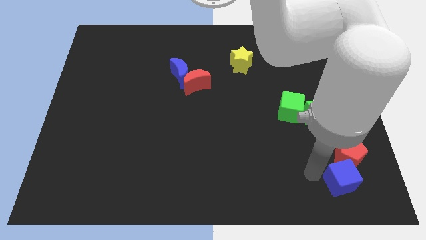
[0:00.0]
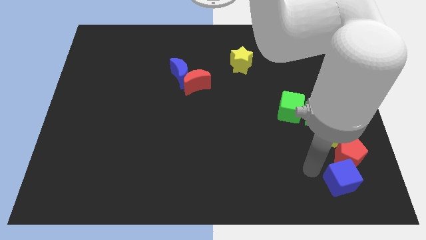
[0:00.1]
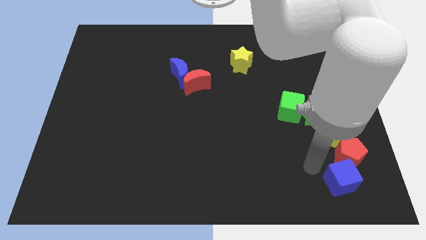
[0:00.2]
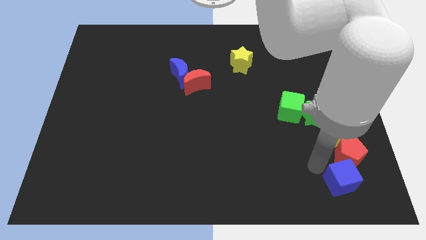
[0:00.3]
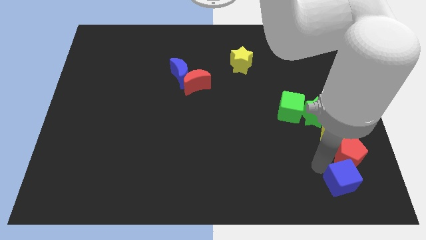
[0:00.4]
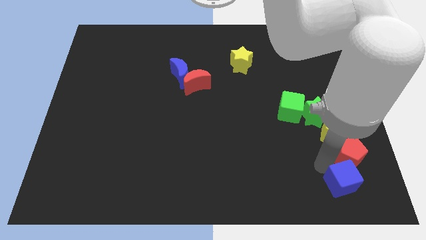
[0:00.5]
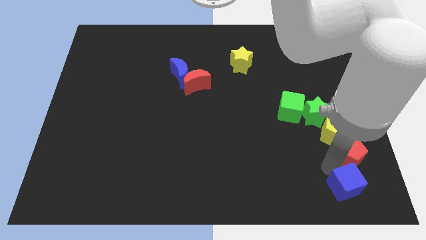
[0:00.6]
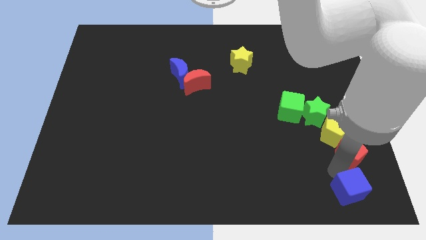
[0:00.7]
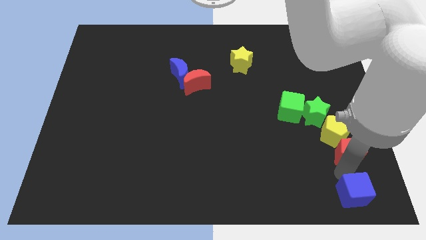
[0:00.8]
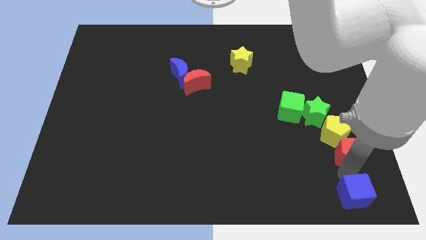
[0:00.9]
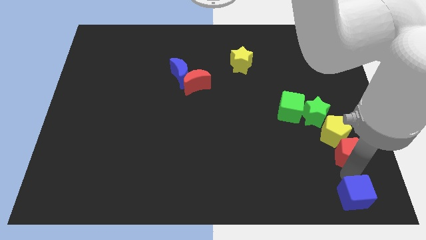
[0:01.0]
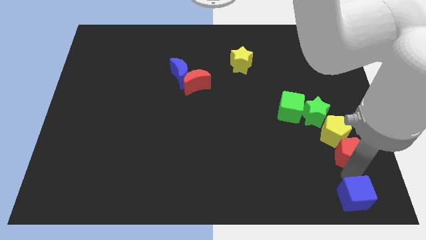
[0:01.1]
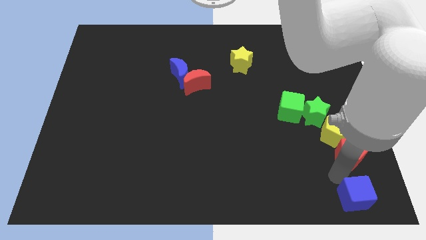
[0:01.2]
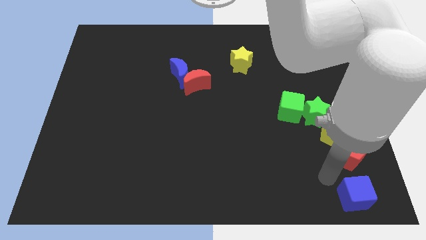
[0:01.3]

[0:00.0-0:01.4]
separate the red pentagon from the blue cube

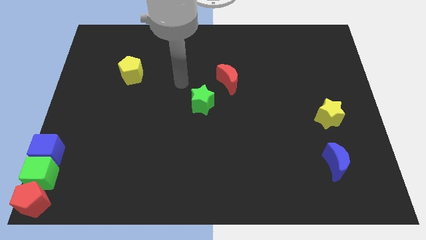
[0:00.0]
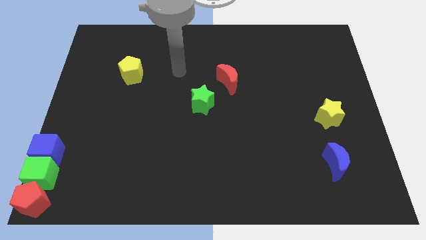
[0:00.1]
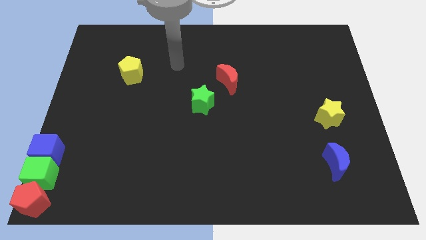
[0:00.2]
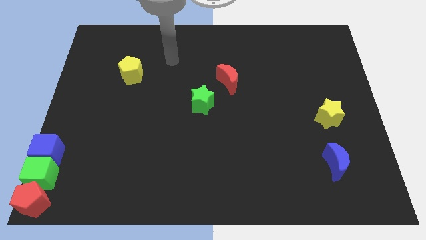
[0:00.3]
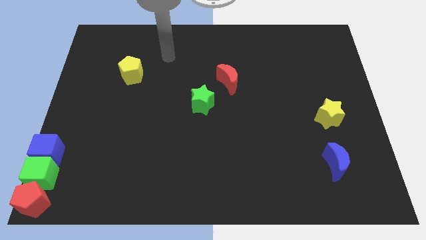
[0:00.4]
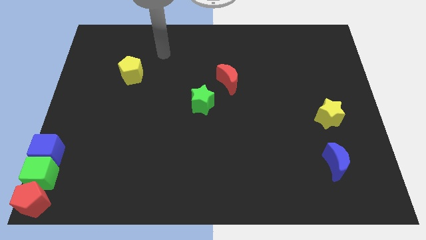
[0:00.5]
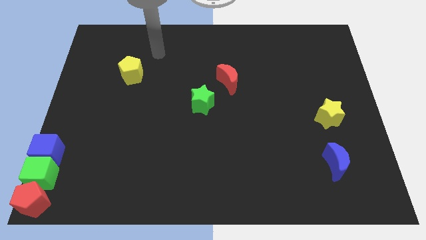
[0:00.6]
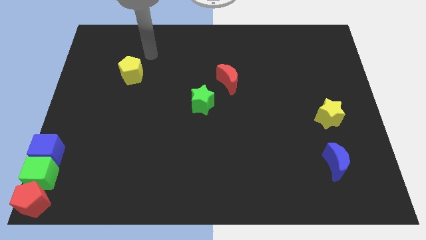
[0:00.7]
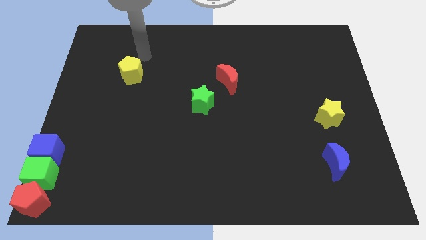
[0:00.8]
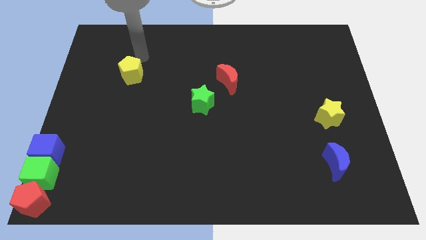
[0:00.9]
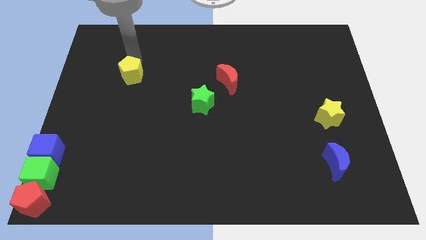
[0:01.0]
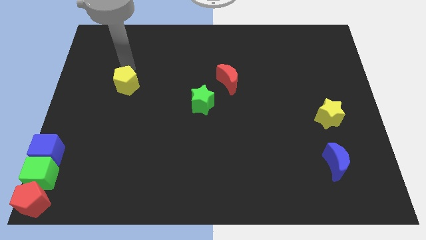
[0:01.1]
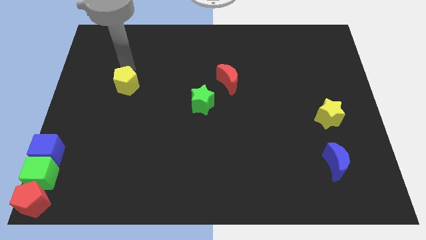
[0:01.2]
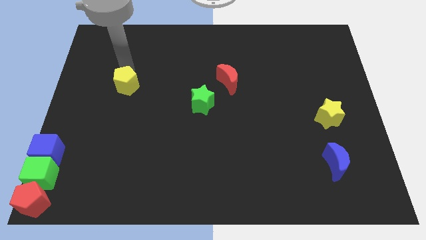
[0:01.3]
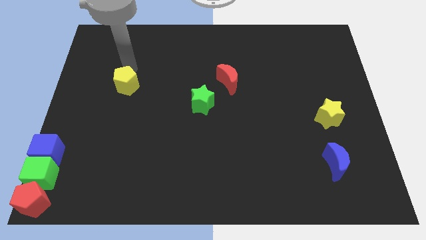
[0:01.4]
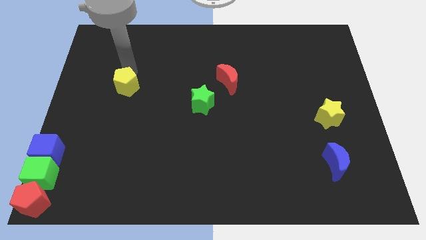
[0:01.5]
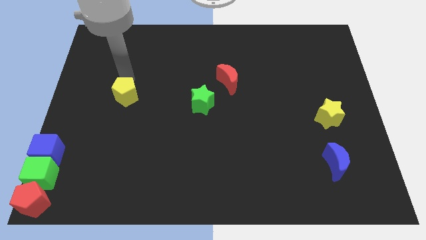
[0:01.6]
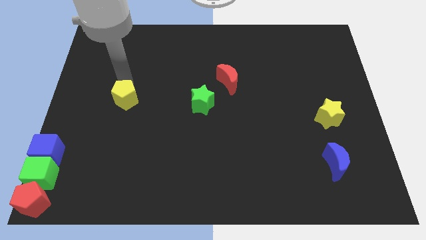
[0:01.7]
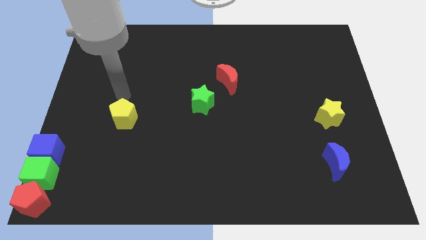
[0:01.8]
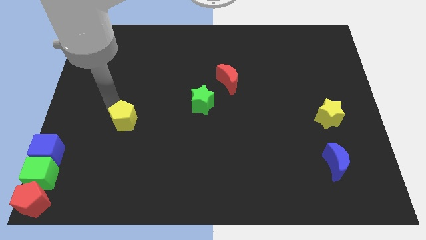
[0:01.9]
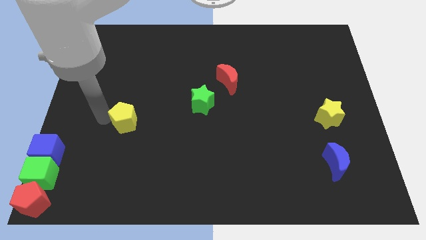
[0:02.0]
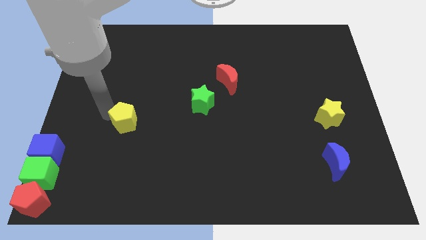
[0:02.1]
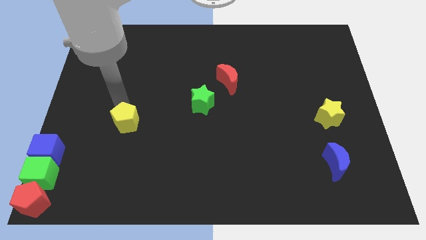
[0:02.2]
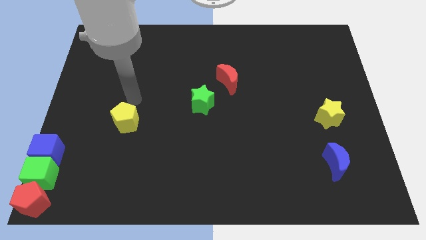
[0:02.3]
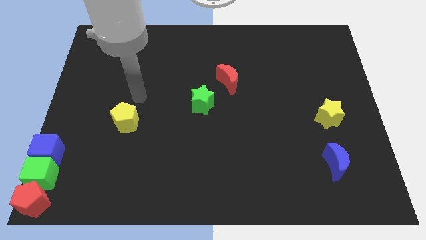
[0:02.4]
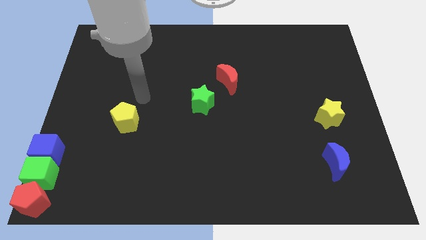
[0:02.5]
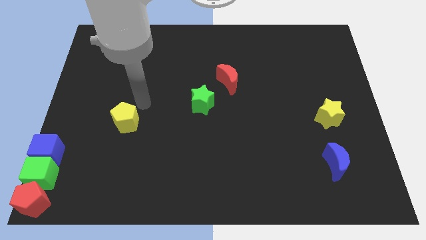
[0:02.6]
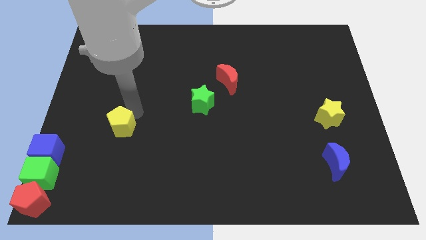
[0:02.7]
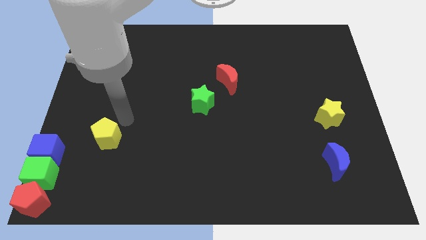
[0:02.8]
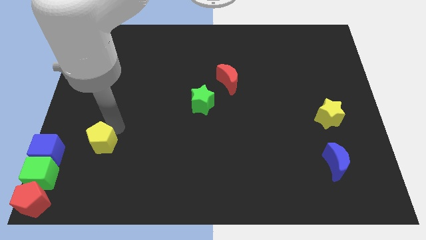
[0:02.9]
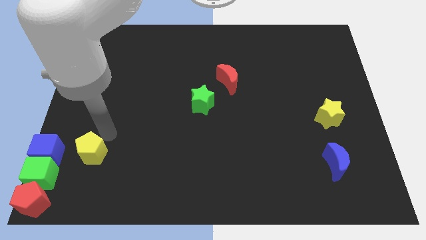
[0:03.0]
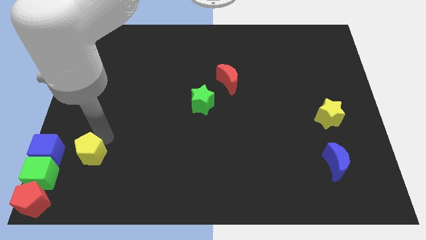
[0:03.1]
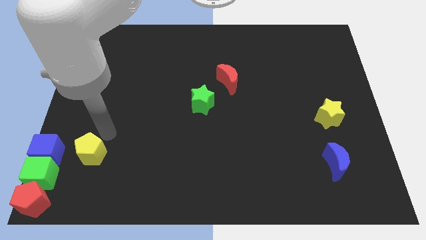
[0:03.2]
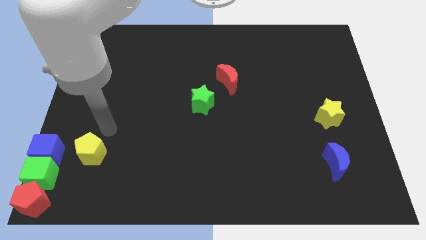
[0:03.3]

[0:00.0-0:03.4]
place the yellow pentago parallel to blue cube

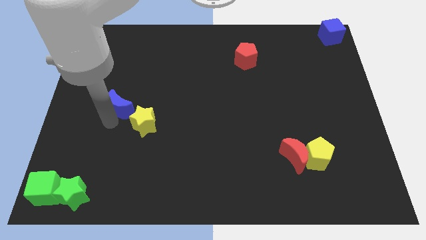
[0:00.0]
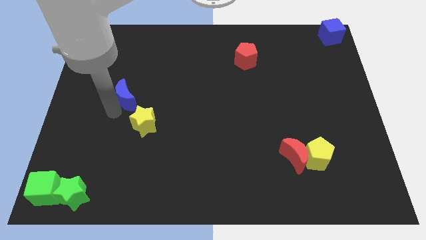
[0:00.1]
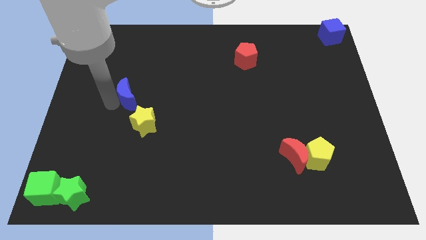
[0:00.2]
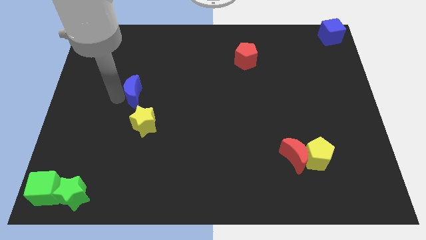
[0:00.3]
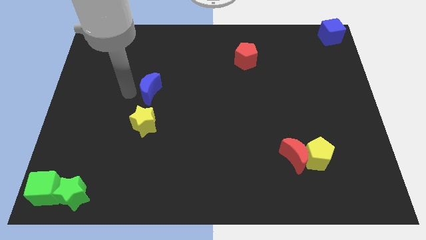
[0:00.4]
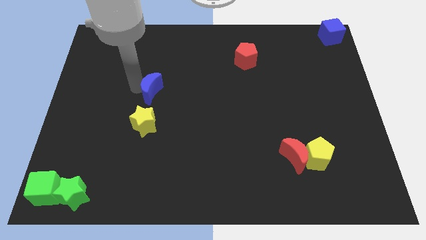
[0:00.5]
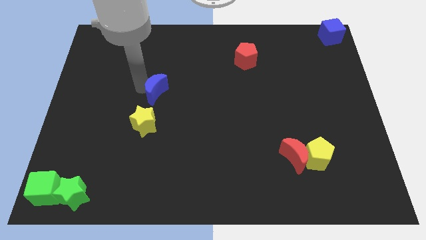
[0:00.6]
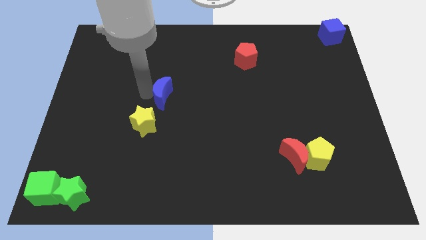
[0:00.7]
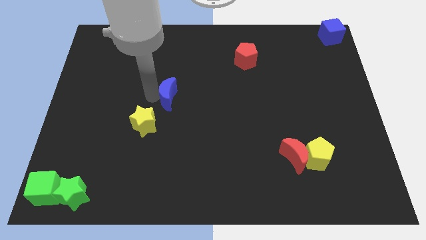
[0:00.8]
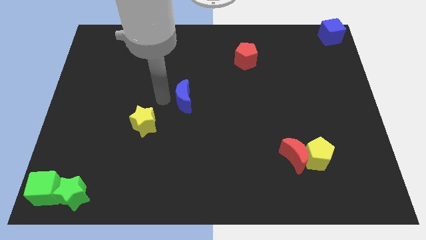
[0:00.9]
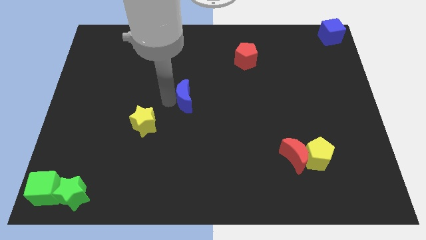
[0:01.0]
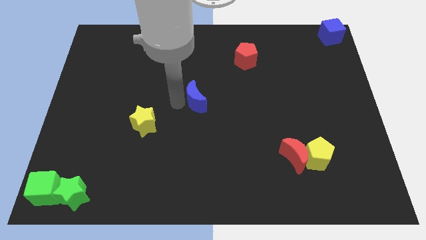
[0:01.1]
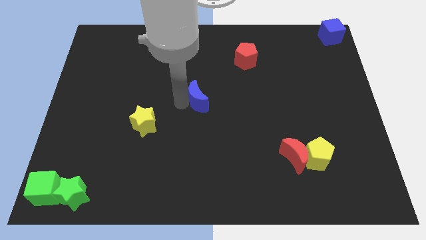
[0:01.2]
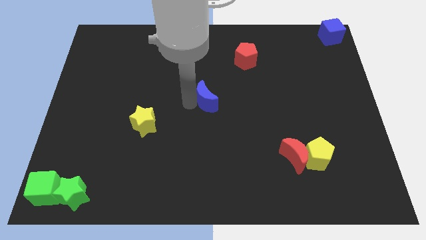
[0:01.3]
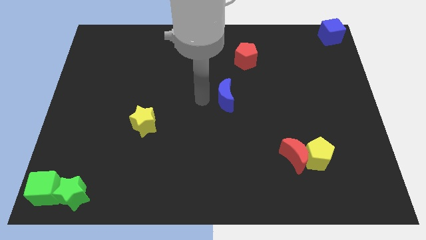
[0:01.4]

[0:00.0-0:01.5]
push the blue crescent to the center of the board

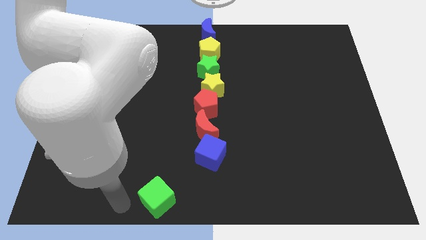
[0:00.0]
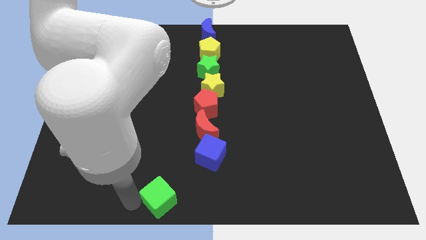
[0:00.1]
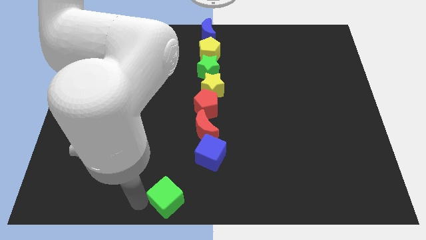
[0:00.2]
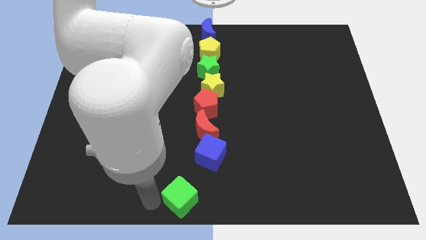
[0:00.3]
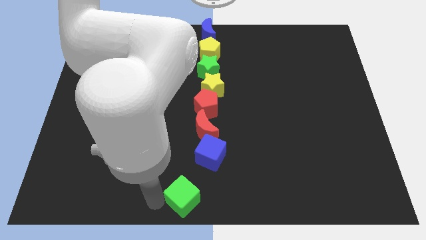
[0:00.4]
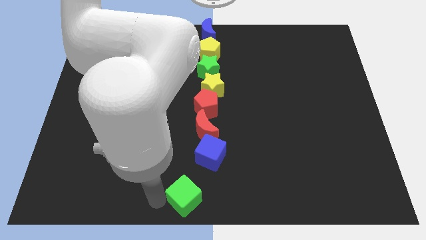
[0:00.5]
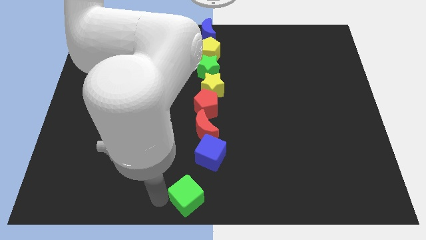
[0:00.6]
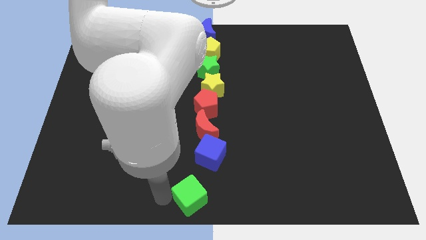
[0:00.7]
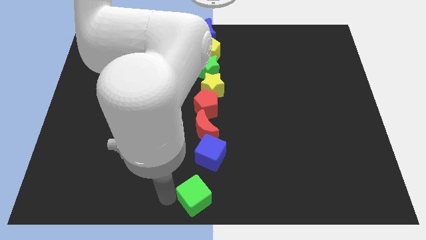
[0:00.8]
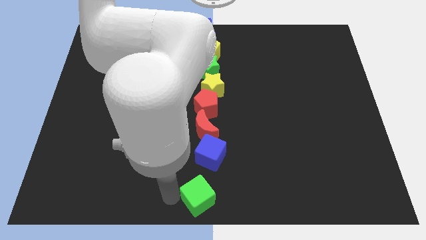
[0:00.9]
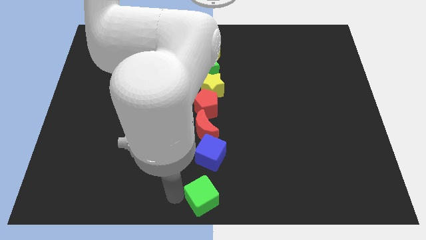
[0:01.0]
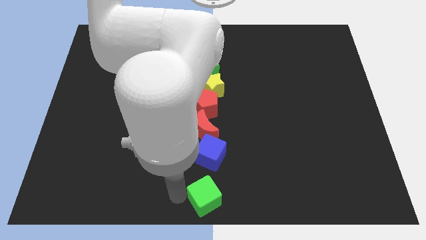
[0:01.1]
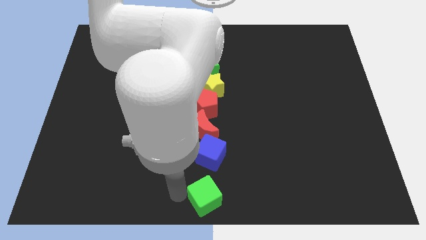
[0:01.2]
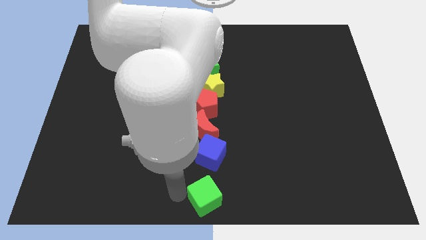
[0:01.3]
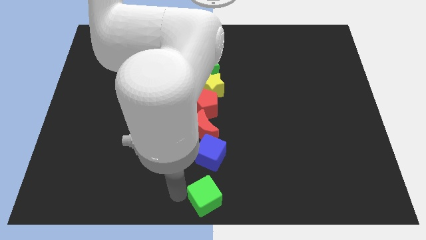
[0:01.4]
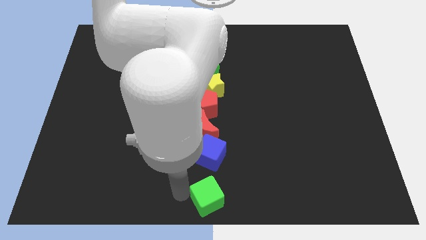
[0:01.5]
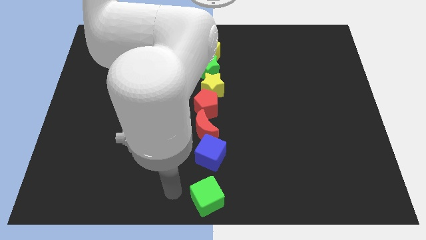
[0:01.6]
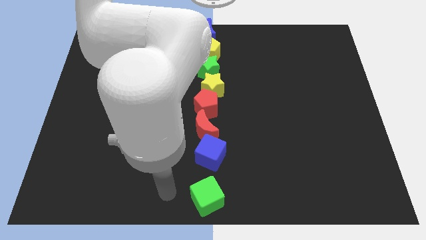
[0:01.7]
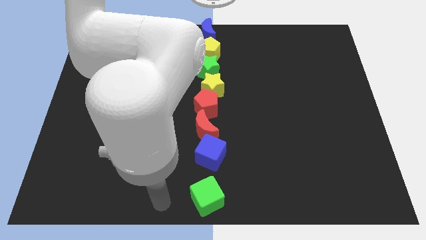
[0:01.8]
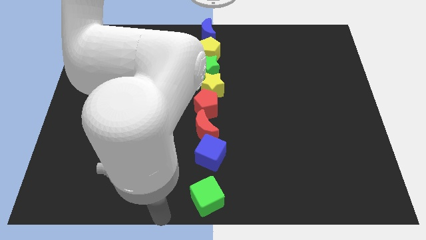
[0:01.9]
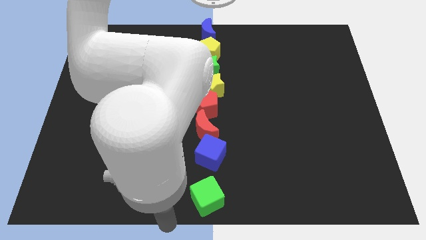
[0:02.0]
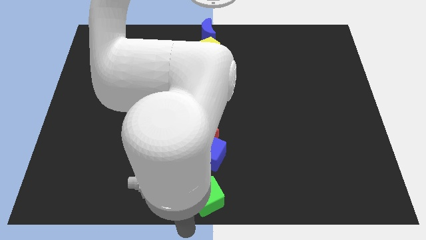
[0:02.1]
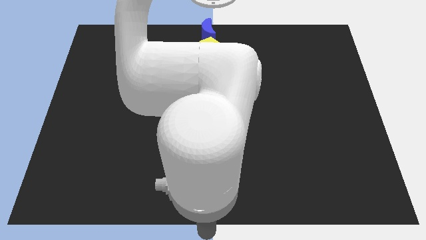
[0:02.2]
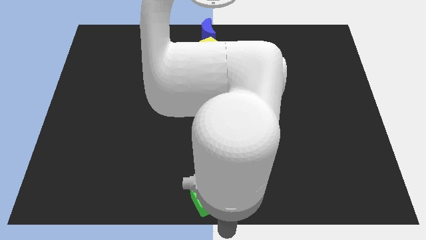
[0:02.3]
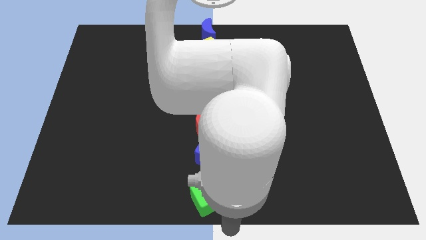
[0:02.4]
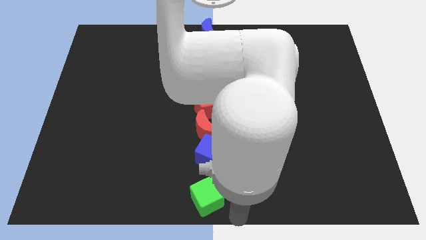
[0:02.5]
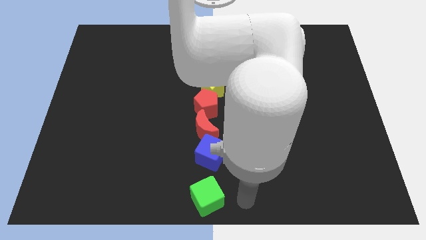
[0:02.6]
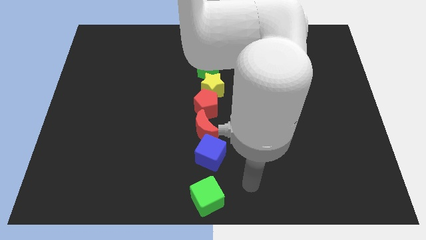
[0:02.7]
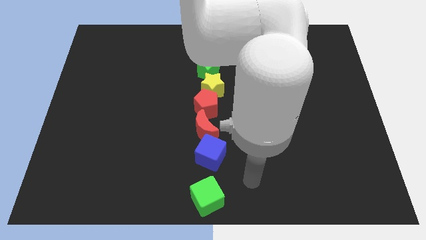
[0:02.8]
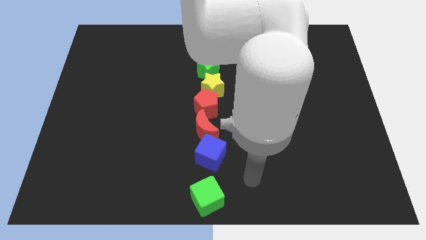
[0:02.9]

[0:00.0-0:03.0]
move your arm down and to the right
